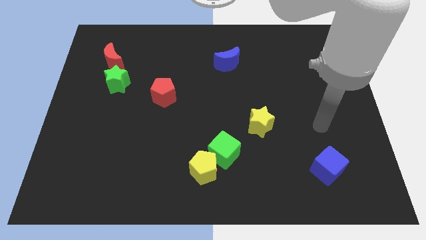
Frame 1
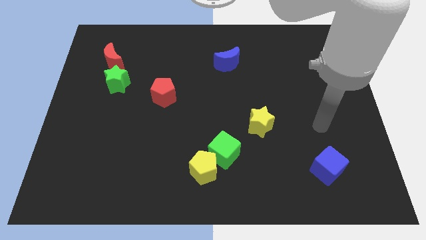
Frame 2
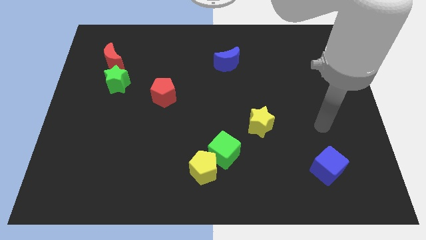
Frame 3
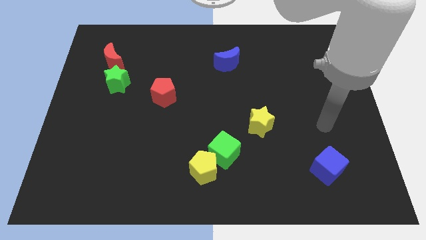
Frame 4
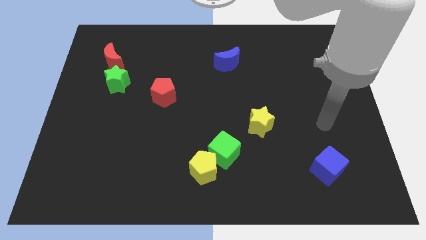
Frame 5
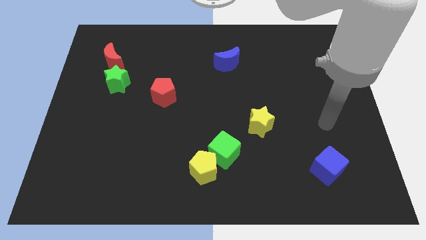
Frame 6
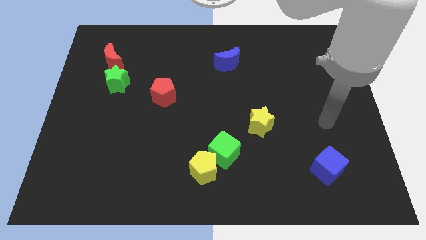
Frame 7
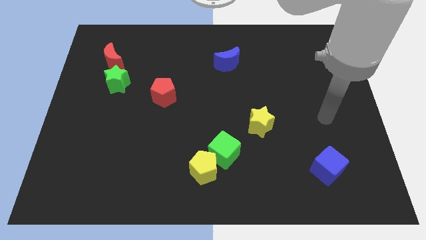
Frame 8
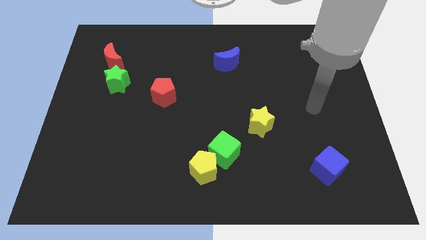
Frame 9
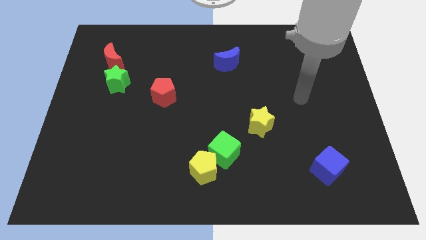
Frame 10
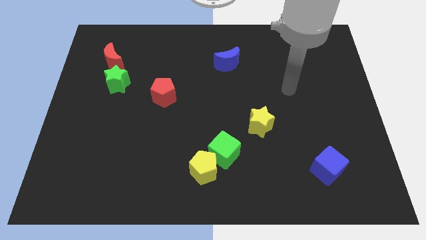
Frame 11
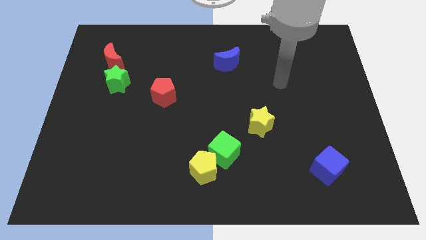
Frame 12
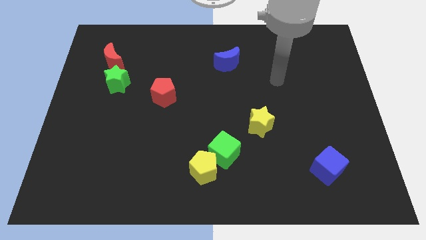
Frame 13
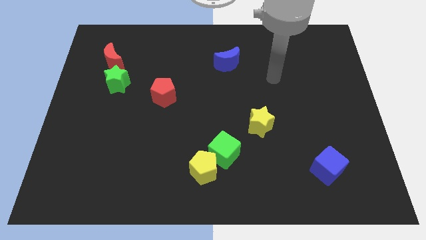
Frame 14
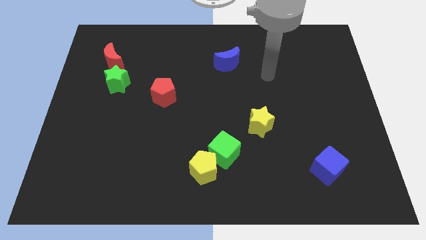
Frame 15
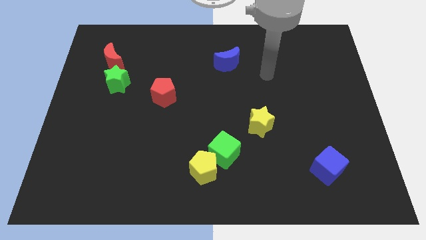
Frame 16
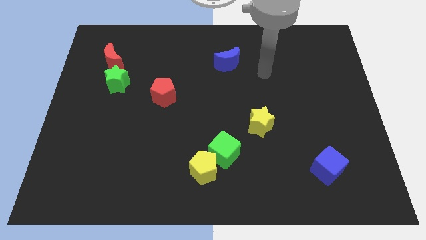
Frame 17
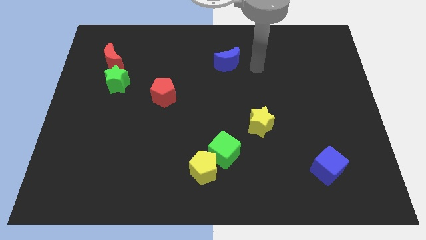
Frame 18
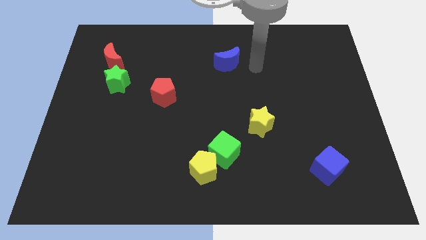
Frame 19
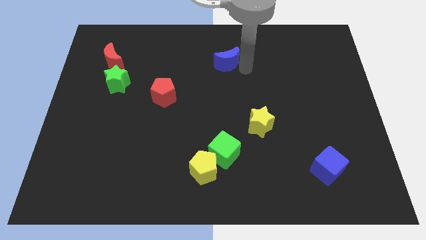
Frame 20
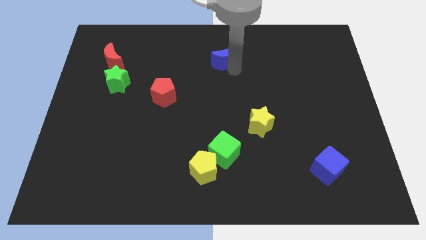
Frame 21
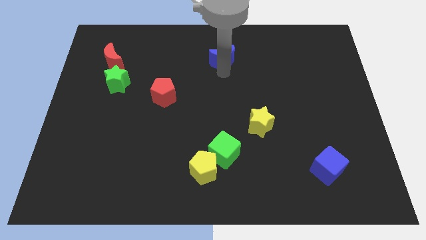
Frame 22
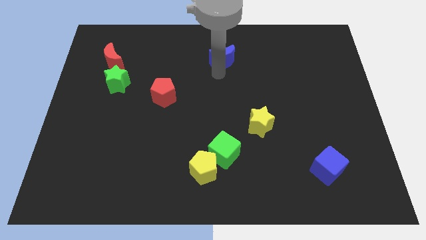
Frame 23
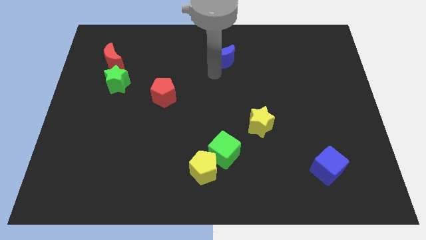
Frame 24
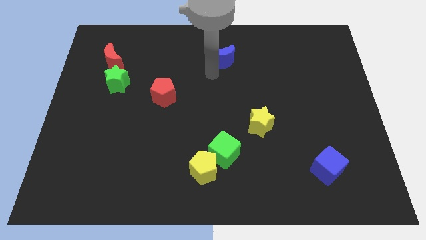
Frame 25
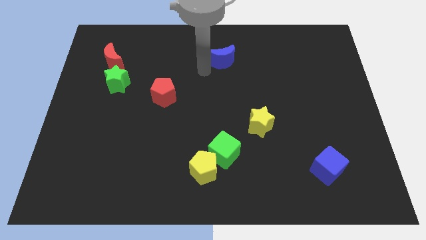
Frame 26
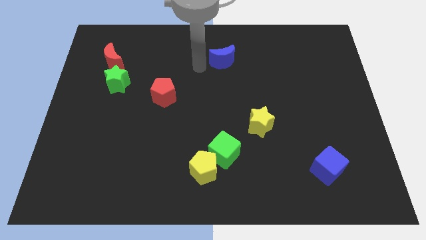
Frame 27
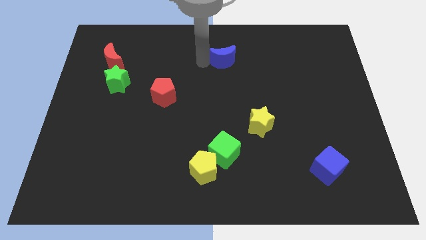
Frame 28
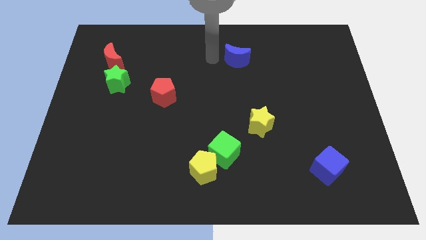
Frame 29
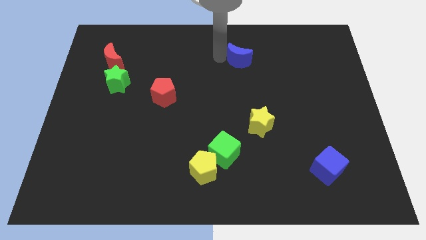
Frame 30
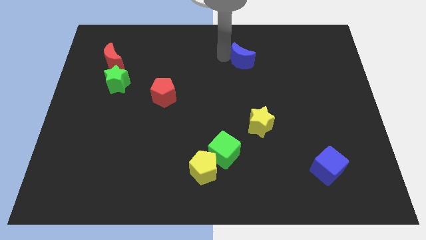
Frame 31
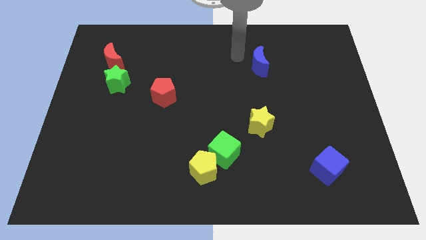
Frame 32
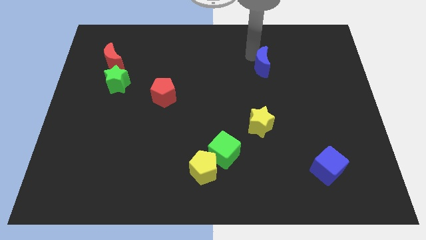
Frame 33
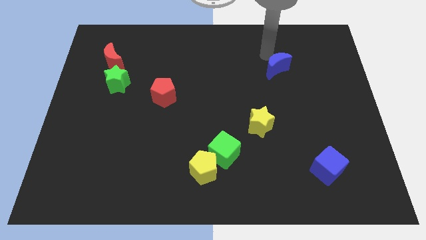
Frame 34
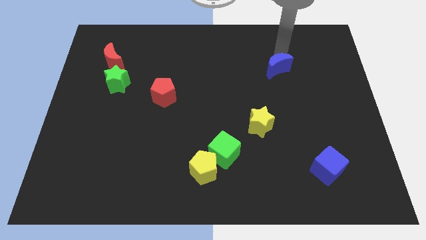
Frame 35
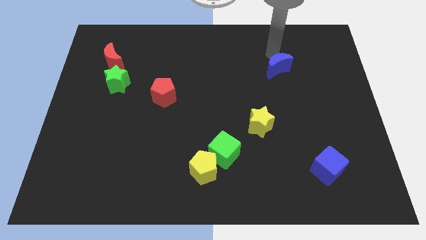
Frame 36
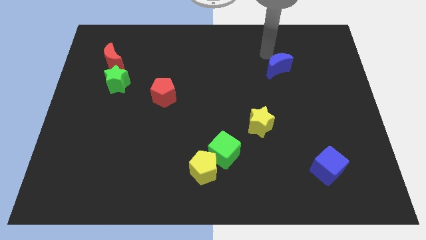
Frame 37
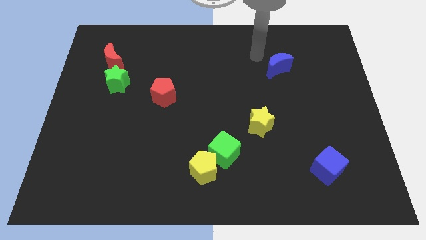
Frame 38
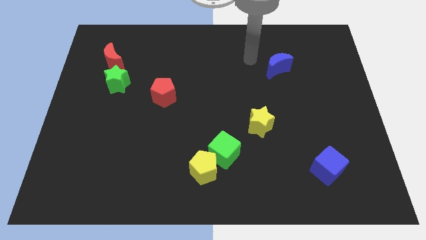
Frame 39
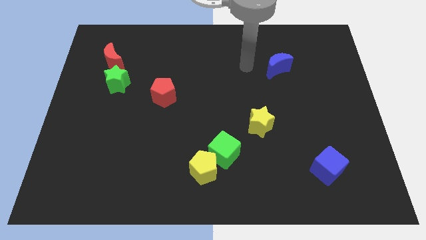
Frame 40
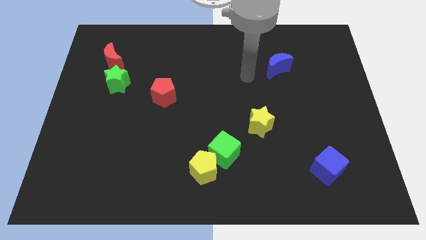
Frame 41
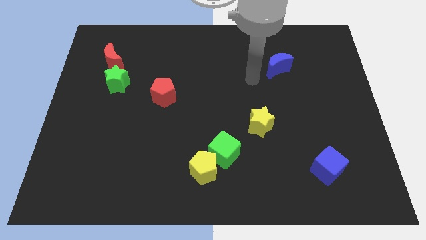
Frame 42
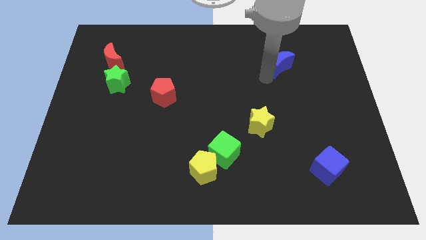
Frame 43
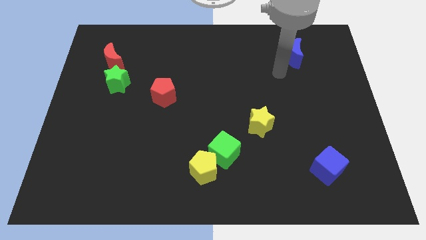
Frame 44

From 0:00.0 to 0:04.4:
move the blue crescent diagonally on the top right side of the yellow star

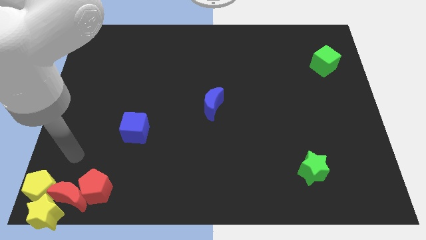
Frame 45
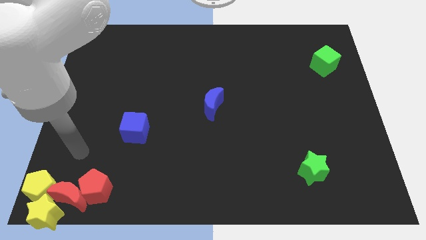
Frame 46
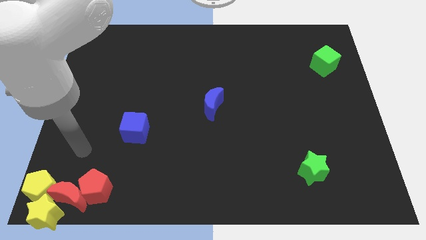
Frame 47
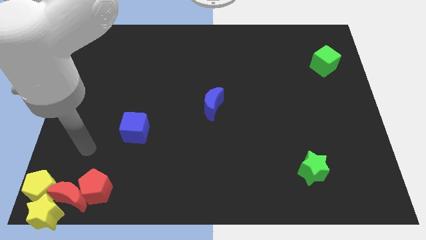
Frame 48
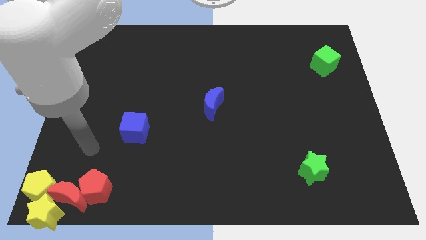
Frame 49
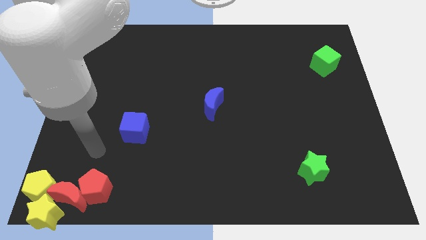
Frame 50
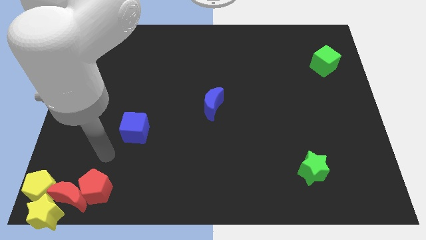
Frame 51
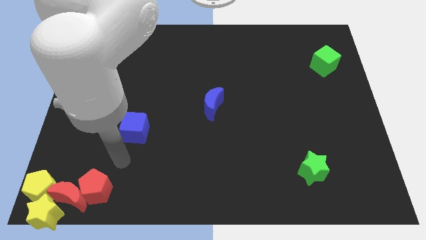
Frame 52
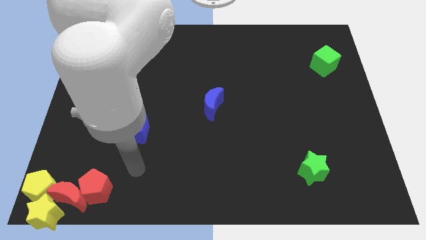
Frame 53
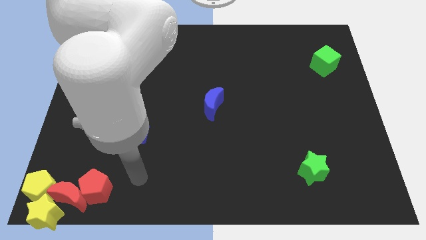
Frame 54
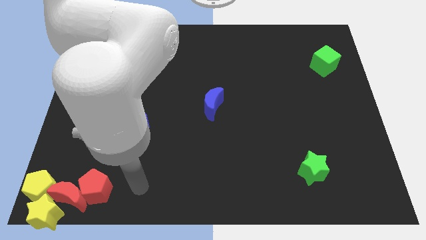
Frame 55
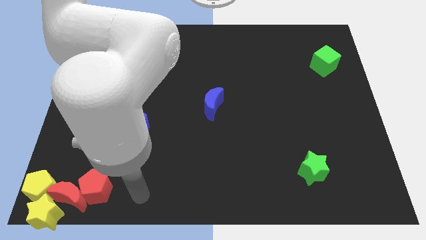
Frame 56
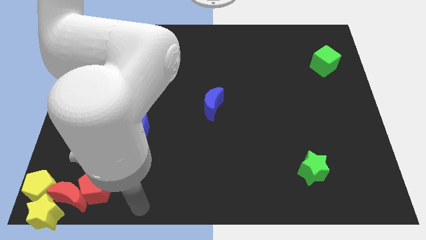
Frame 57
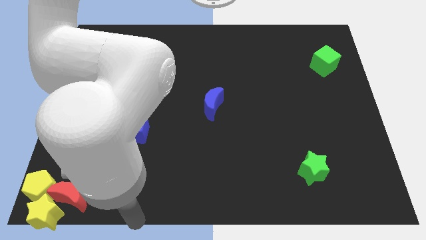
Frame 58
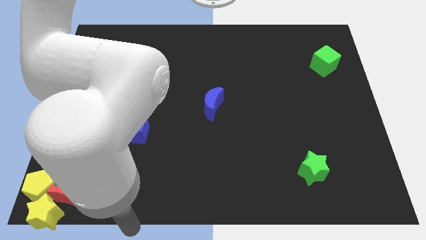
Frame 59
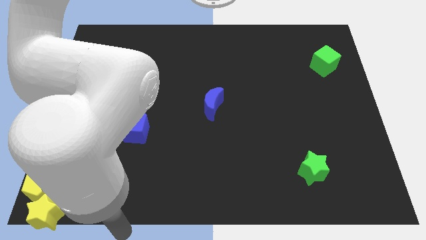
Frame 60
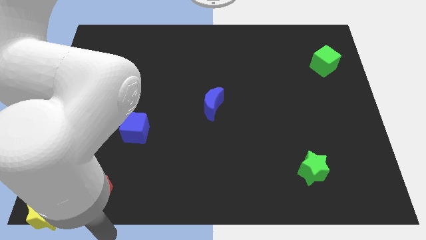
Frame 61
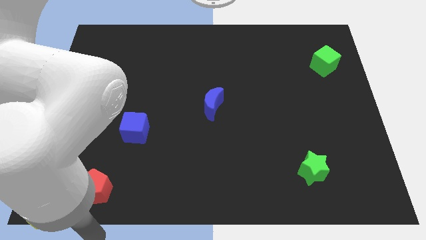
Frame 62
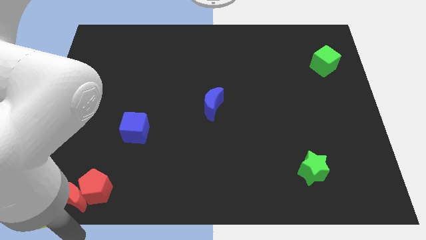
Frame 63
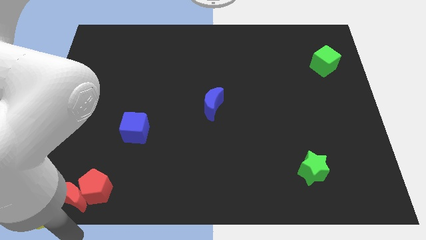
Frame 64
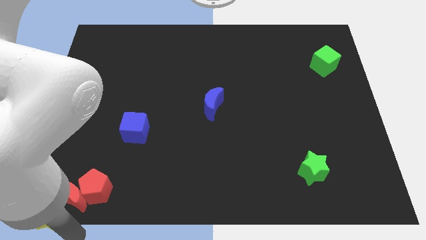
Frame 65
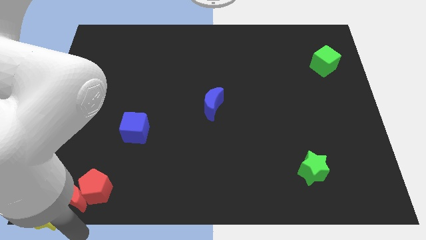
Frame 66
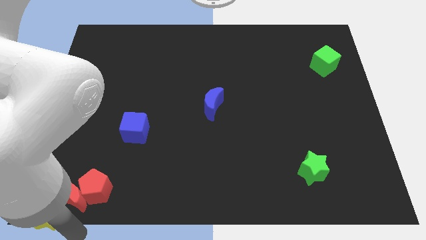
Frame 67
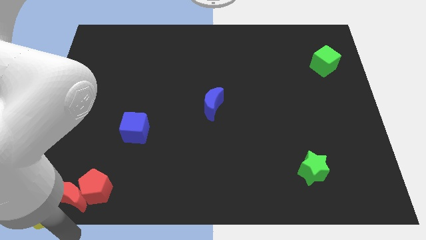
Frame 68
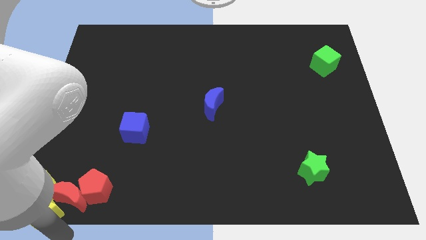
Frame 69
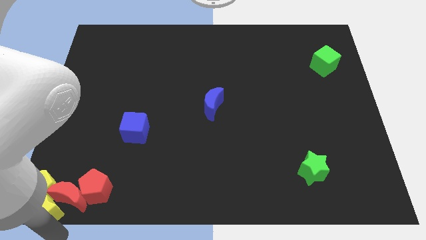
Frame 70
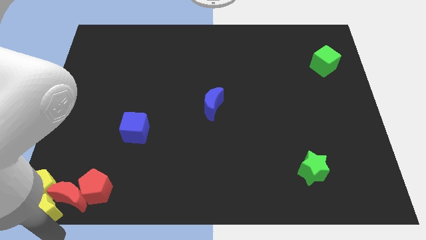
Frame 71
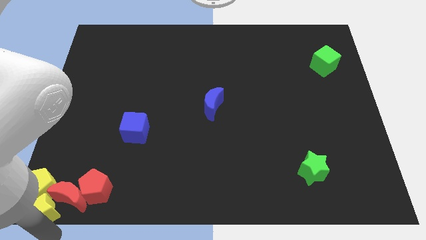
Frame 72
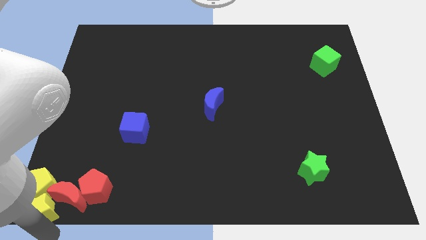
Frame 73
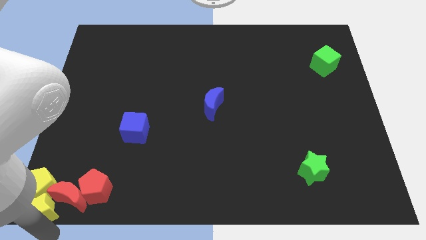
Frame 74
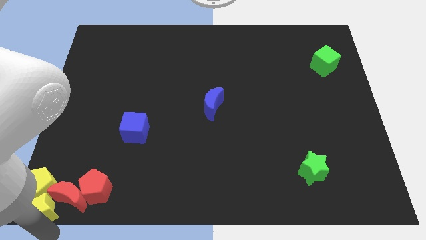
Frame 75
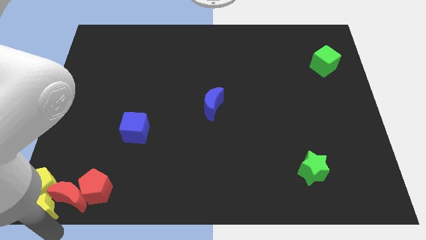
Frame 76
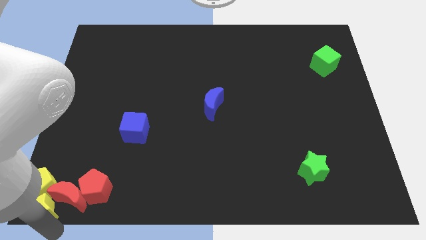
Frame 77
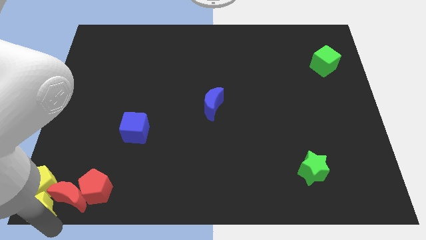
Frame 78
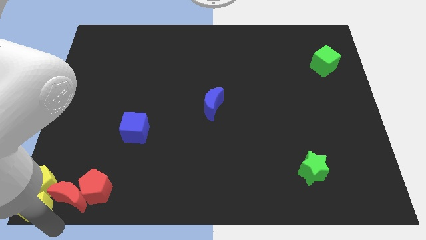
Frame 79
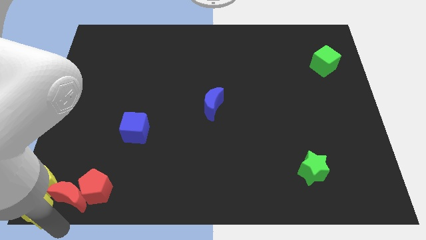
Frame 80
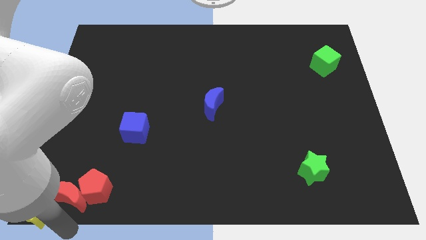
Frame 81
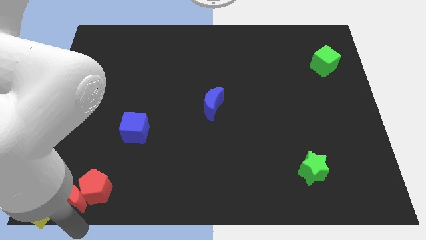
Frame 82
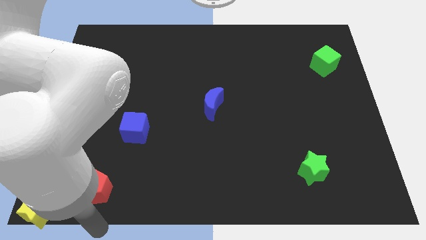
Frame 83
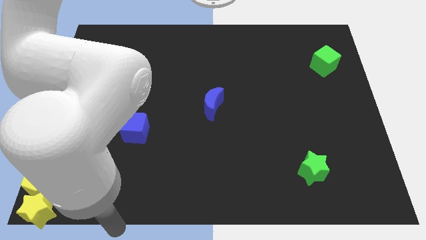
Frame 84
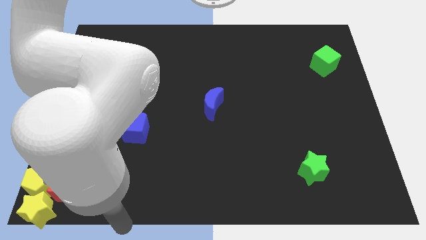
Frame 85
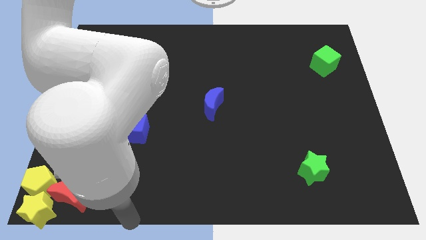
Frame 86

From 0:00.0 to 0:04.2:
move yellow star slightly up

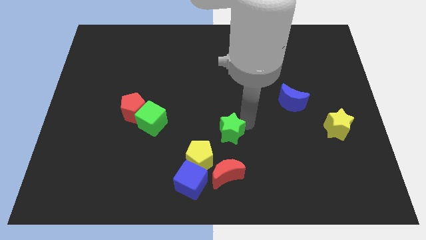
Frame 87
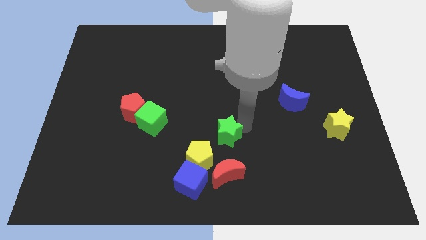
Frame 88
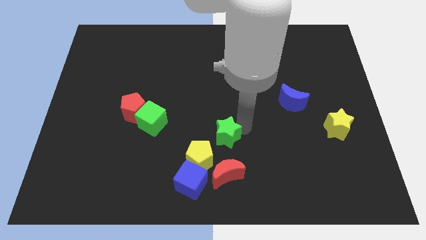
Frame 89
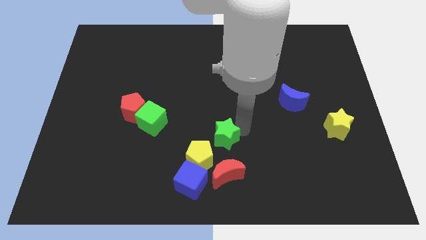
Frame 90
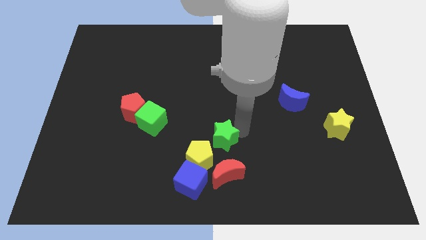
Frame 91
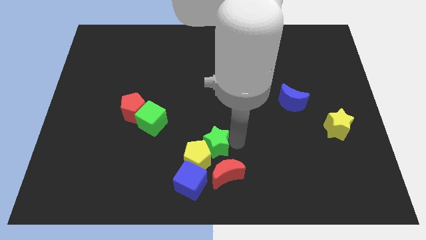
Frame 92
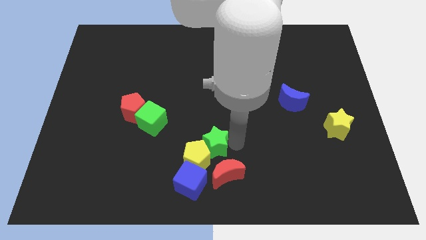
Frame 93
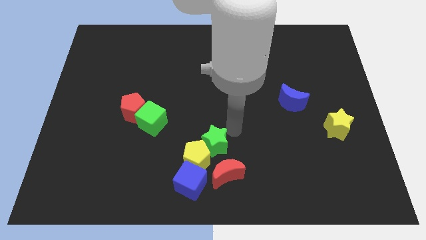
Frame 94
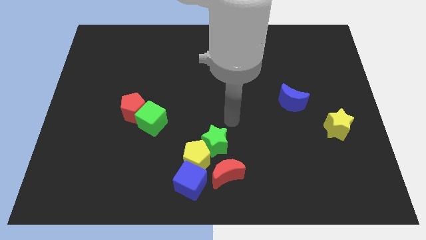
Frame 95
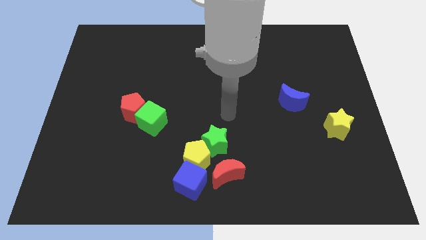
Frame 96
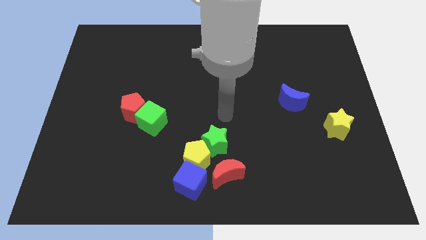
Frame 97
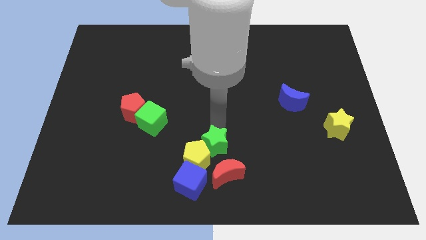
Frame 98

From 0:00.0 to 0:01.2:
push the green star into the yellow pentagon
